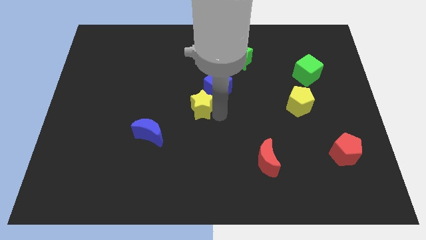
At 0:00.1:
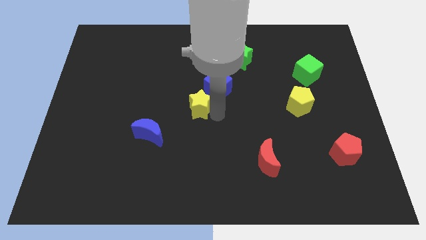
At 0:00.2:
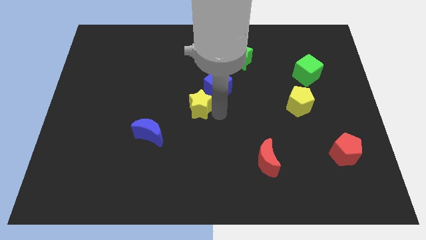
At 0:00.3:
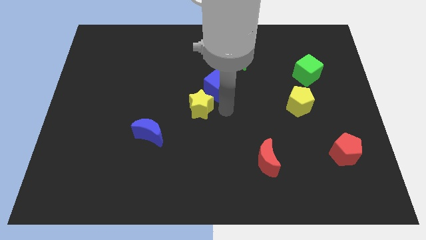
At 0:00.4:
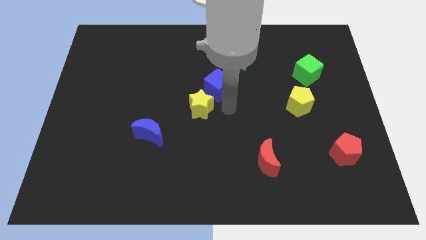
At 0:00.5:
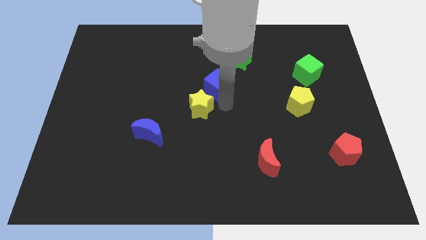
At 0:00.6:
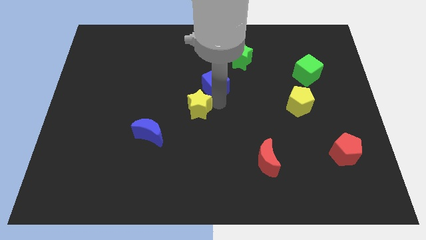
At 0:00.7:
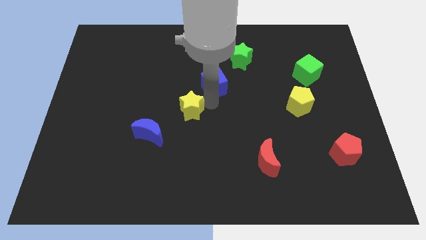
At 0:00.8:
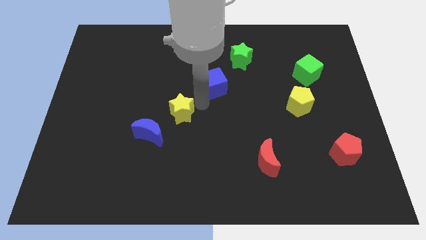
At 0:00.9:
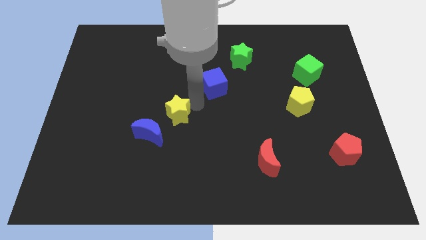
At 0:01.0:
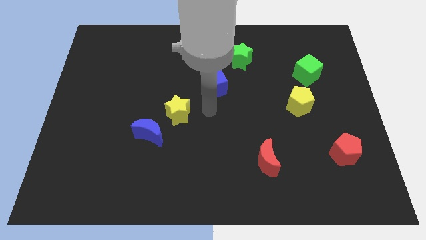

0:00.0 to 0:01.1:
place the yellow star in between the blue cube and blue cube

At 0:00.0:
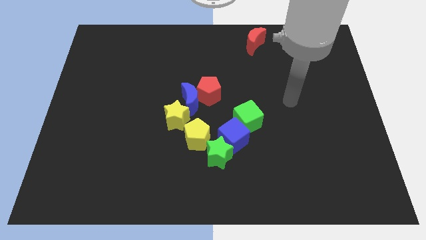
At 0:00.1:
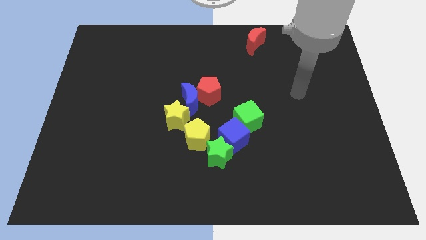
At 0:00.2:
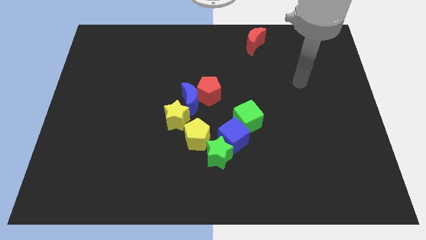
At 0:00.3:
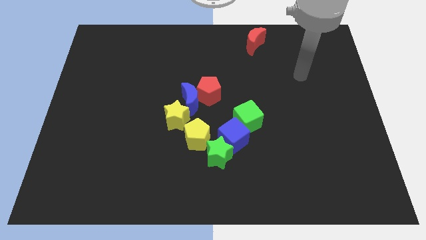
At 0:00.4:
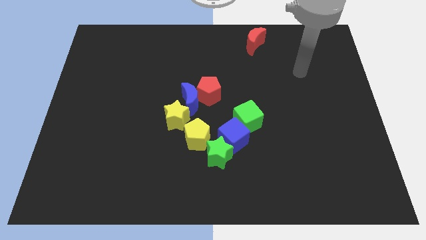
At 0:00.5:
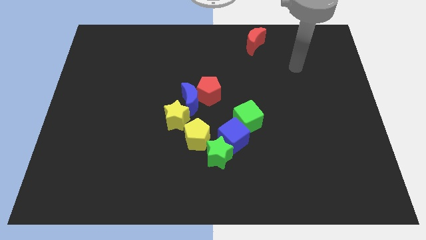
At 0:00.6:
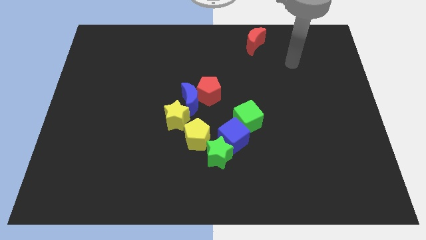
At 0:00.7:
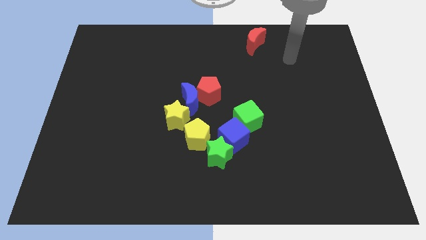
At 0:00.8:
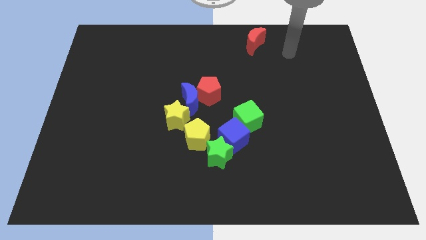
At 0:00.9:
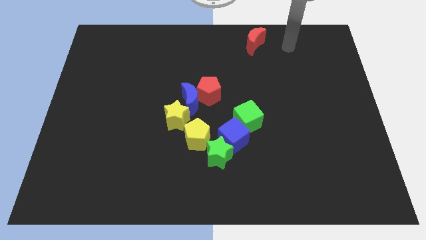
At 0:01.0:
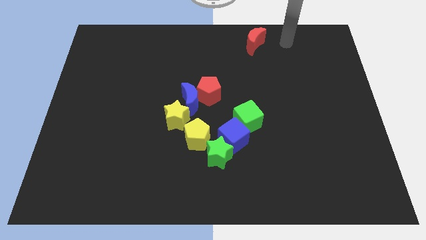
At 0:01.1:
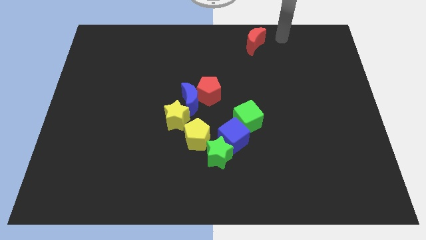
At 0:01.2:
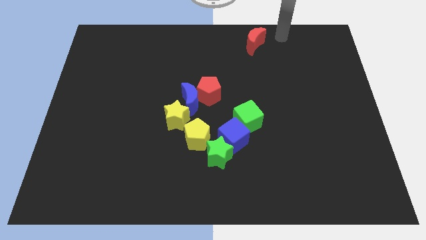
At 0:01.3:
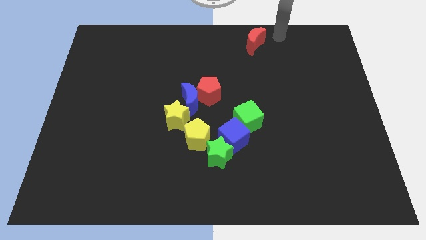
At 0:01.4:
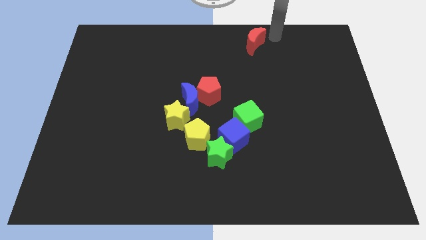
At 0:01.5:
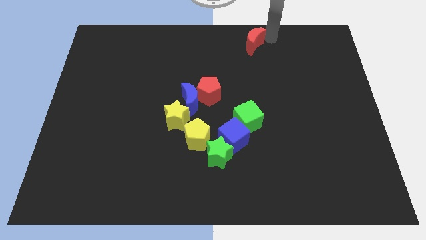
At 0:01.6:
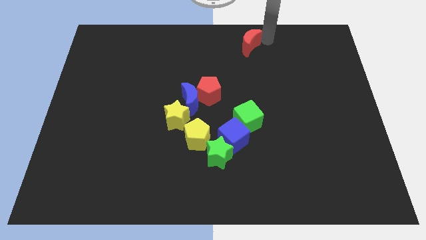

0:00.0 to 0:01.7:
move the arm towards the red crescent

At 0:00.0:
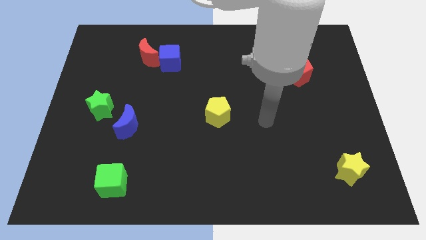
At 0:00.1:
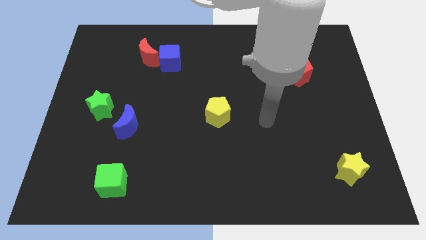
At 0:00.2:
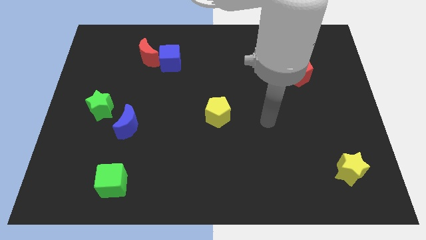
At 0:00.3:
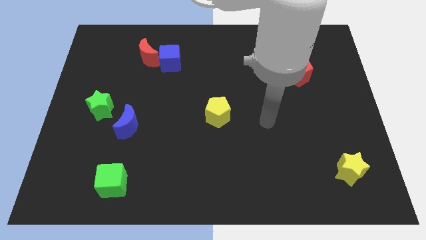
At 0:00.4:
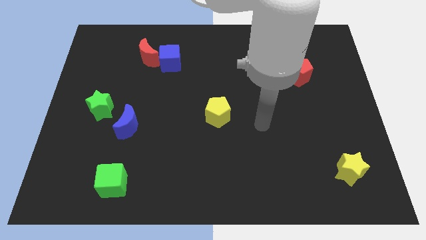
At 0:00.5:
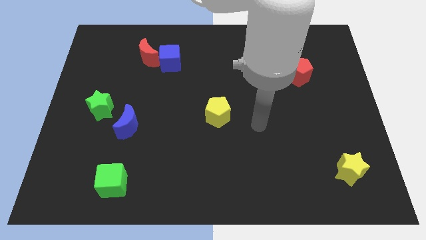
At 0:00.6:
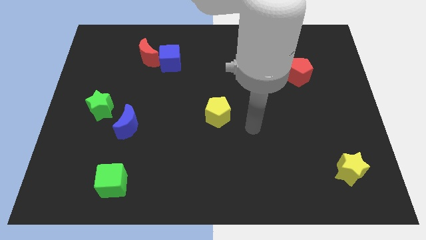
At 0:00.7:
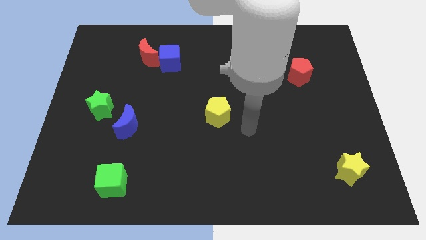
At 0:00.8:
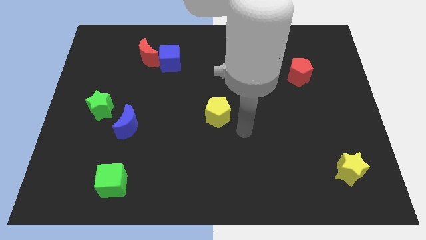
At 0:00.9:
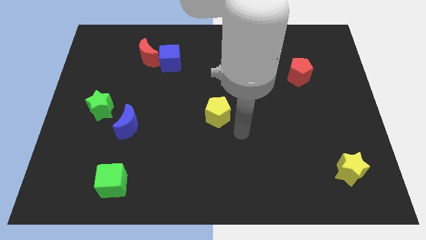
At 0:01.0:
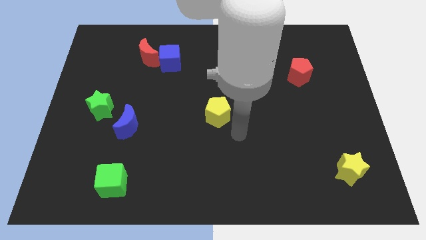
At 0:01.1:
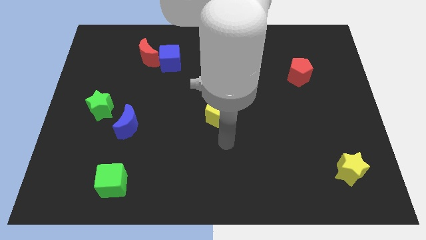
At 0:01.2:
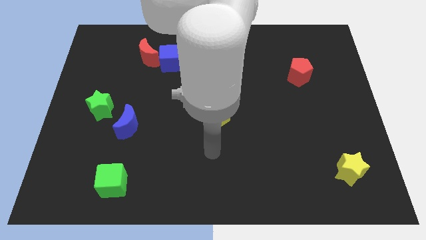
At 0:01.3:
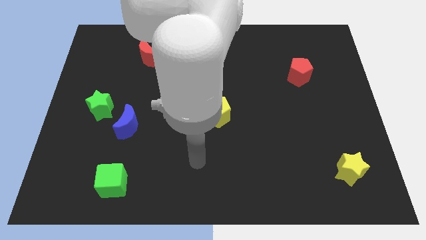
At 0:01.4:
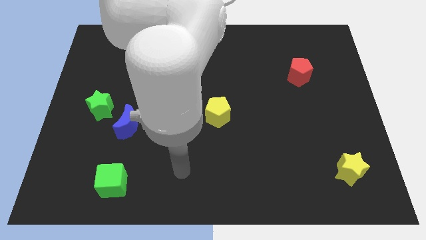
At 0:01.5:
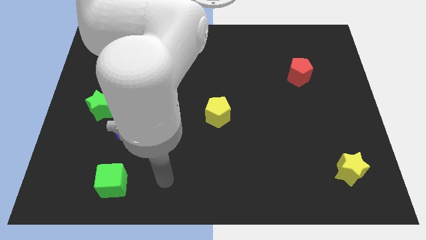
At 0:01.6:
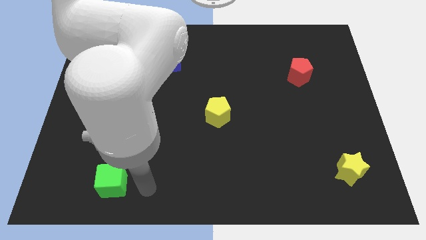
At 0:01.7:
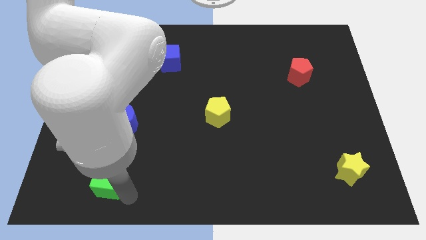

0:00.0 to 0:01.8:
place the arm to the right of the green cube

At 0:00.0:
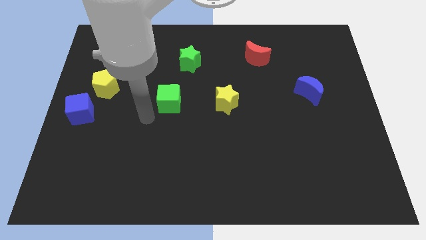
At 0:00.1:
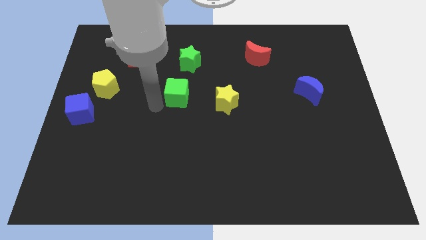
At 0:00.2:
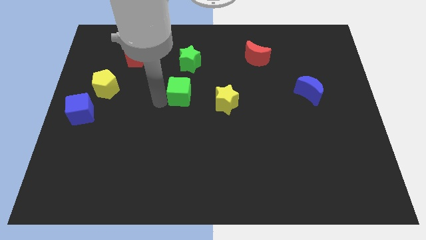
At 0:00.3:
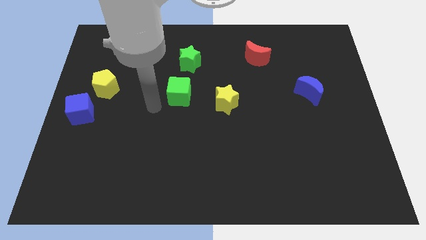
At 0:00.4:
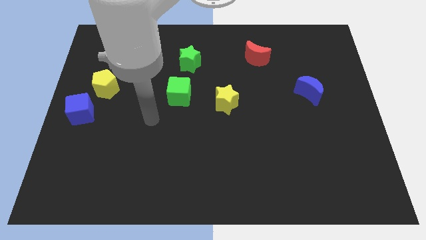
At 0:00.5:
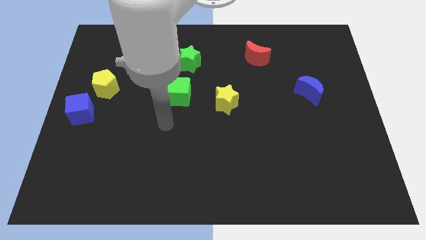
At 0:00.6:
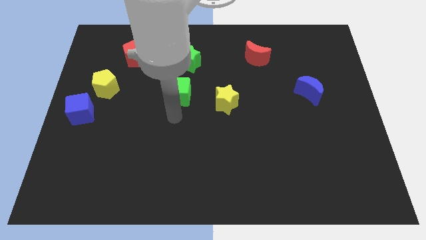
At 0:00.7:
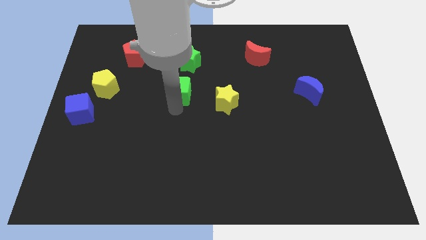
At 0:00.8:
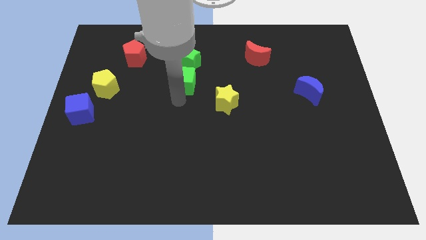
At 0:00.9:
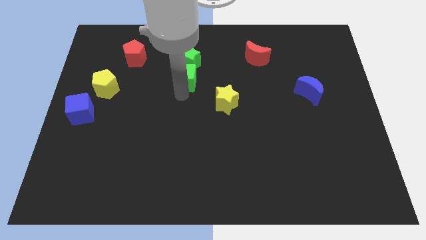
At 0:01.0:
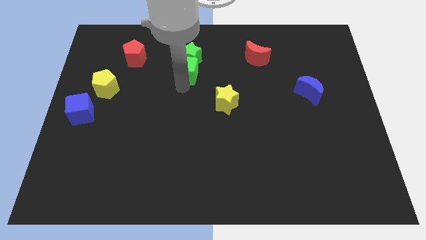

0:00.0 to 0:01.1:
push green cube in to green star

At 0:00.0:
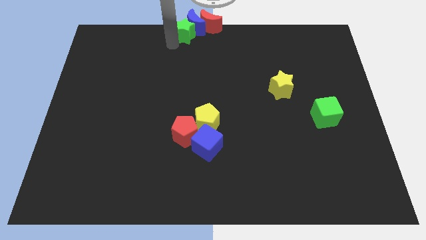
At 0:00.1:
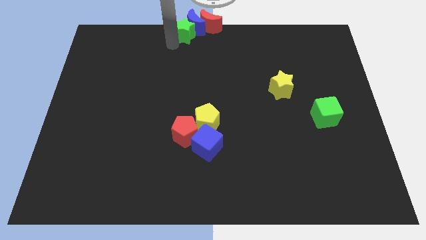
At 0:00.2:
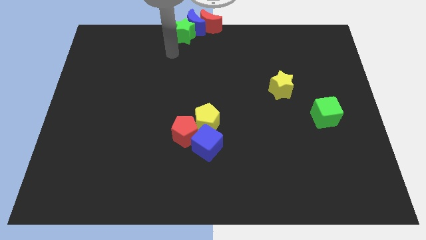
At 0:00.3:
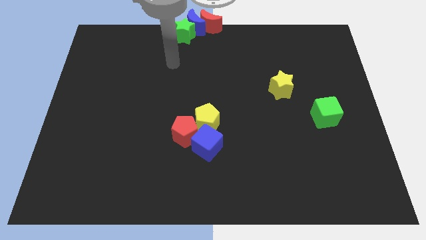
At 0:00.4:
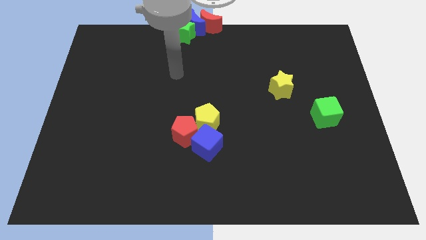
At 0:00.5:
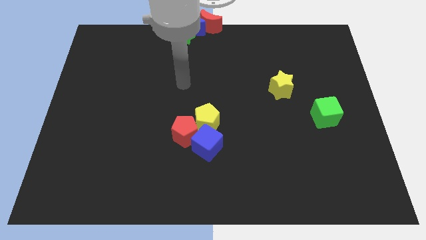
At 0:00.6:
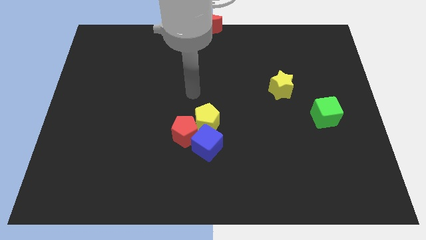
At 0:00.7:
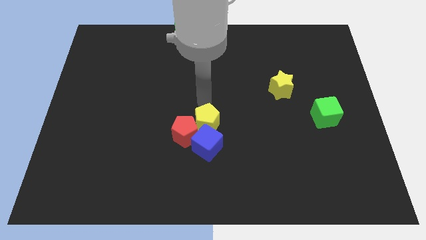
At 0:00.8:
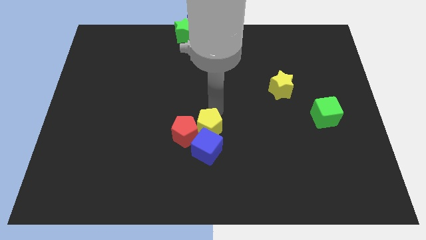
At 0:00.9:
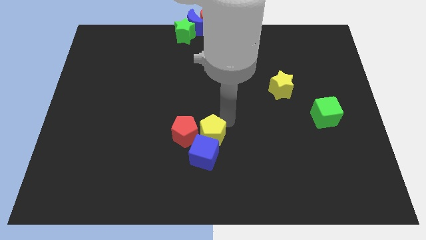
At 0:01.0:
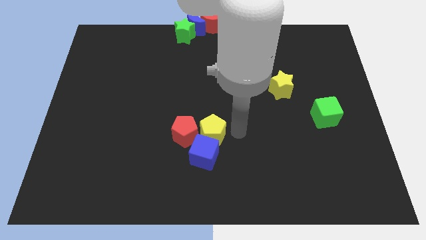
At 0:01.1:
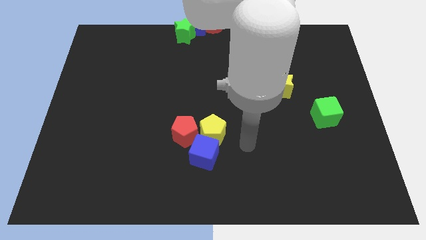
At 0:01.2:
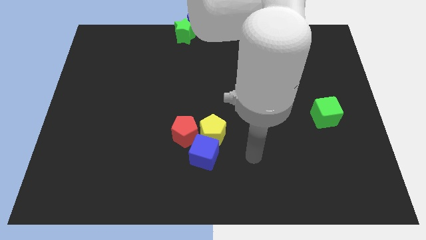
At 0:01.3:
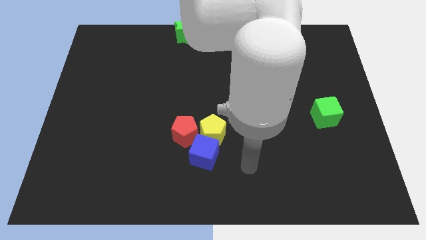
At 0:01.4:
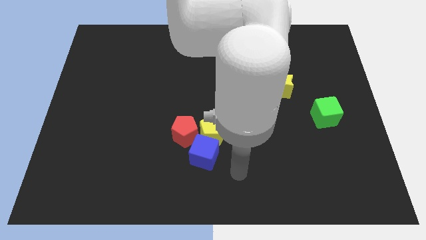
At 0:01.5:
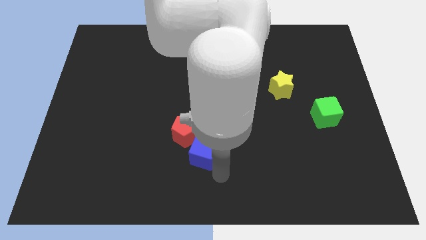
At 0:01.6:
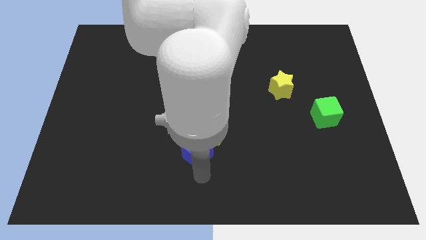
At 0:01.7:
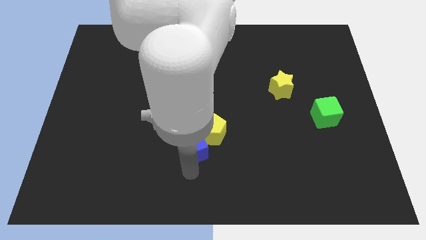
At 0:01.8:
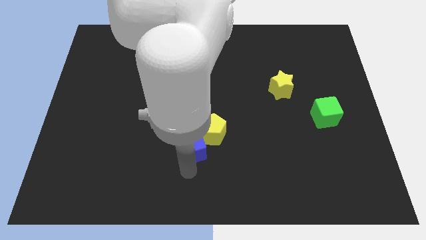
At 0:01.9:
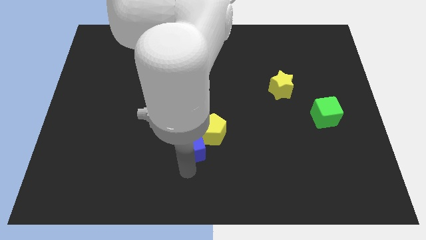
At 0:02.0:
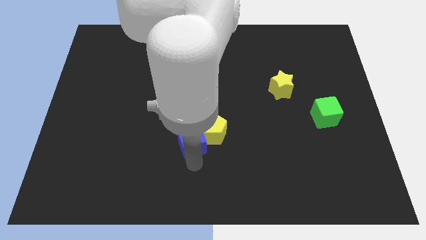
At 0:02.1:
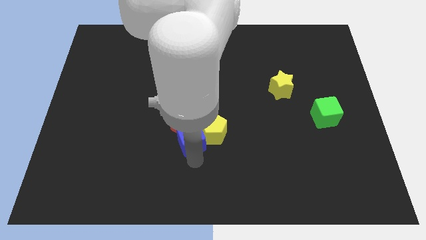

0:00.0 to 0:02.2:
separate blue cube from red pentagon

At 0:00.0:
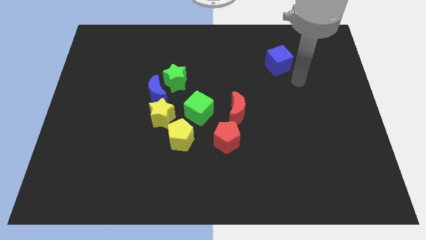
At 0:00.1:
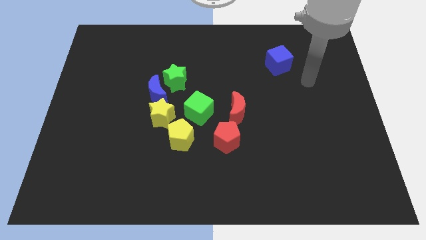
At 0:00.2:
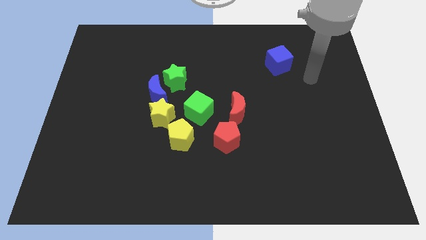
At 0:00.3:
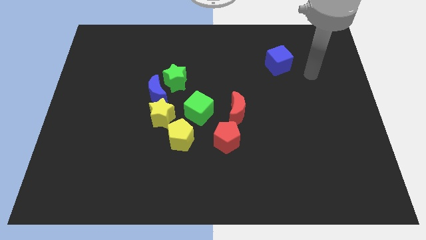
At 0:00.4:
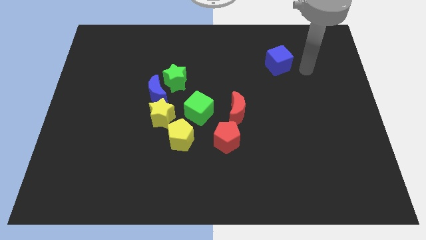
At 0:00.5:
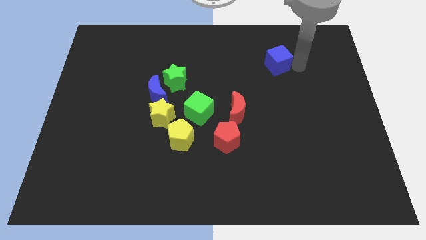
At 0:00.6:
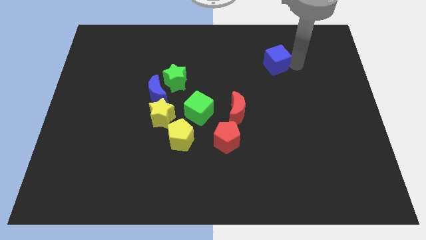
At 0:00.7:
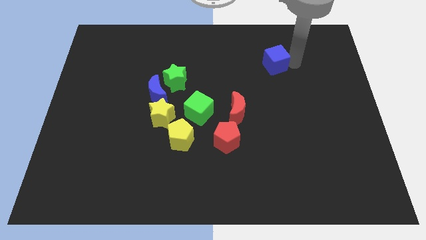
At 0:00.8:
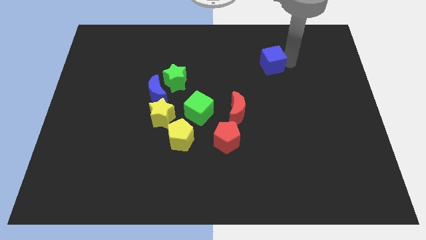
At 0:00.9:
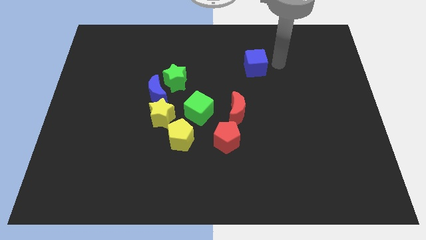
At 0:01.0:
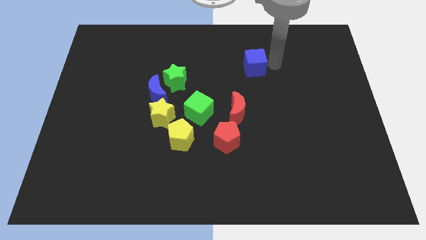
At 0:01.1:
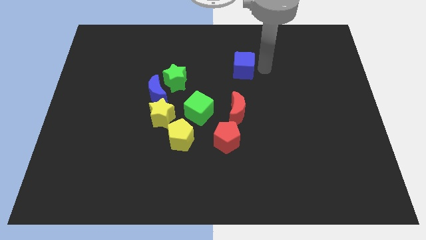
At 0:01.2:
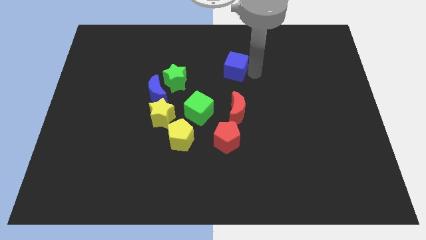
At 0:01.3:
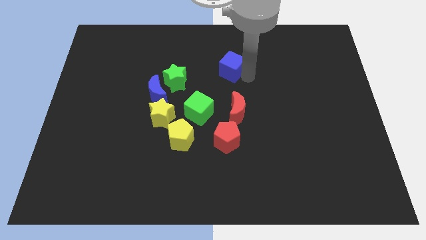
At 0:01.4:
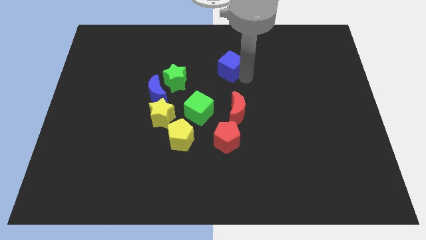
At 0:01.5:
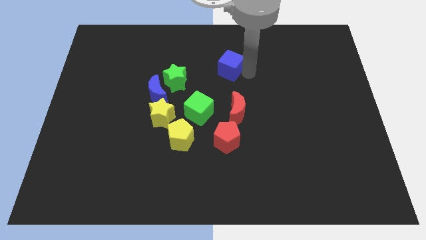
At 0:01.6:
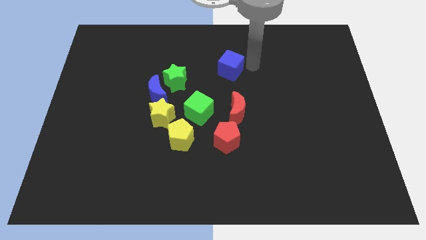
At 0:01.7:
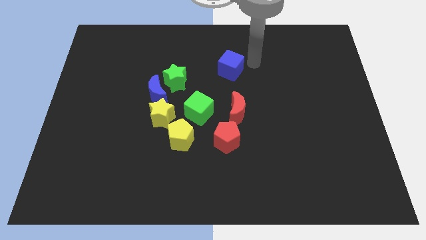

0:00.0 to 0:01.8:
push the blue cube towards the green star
